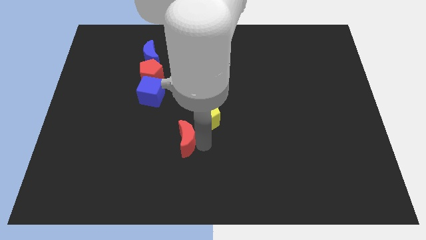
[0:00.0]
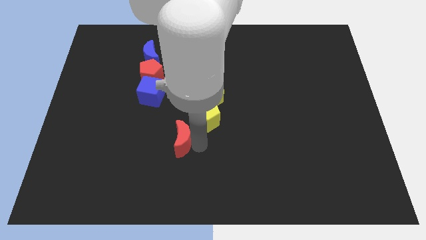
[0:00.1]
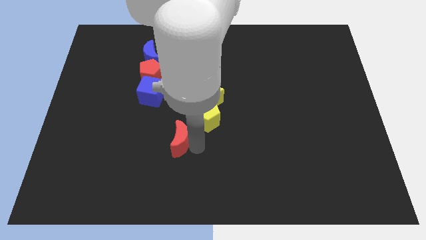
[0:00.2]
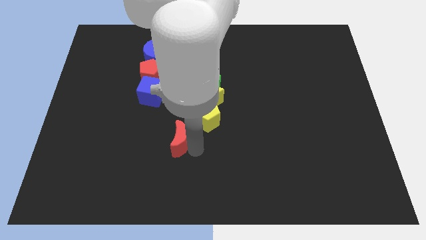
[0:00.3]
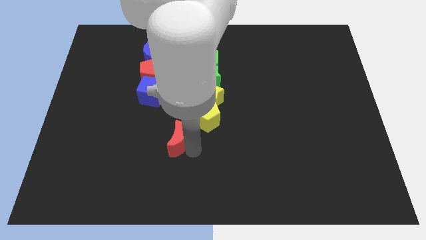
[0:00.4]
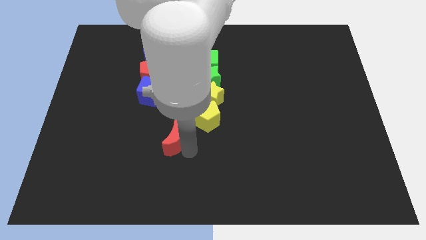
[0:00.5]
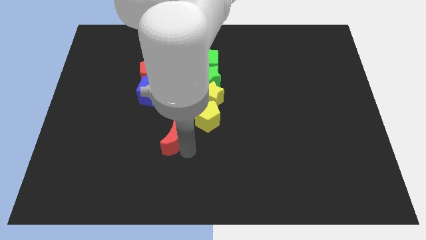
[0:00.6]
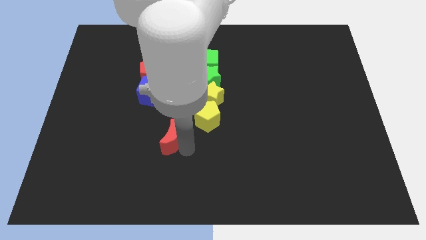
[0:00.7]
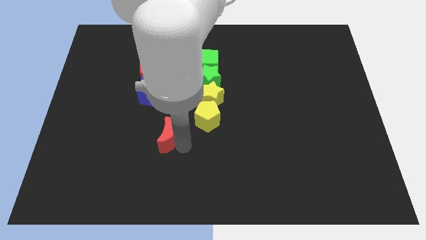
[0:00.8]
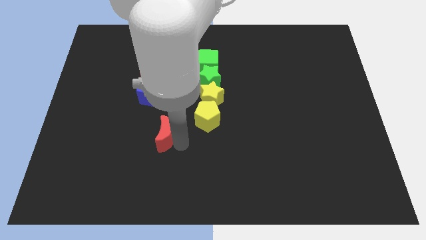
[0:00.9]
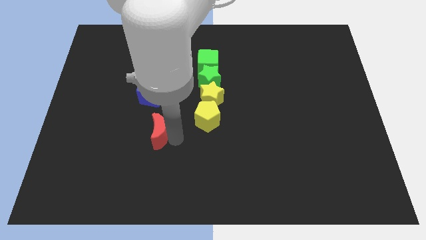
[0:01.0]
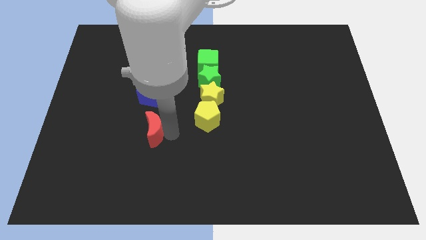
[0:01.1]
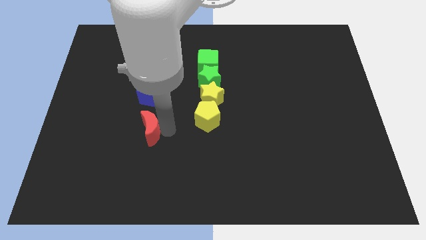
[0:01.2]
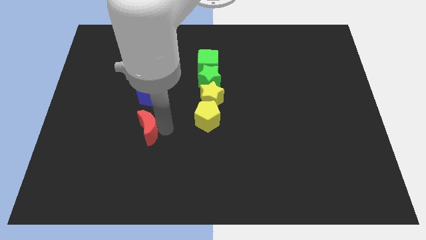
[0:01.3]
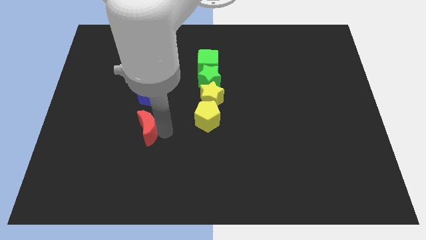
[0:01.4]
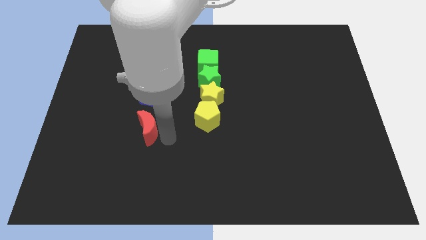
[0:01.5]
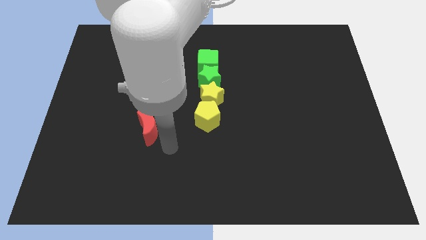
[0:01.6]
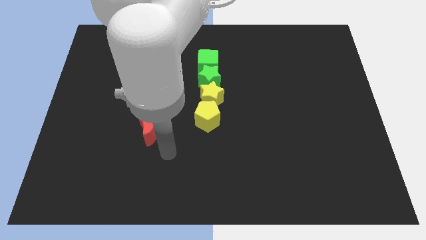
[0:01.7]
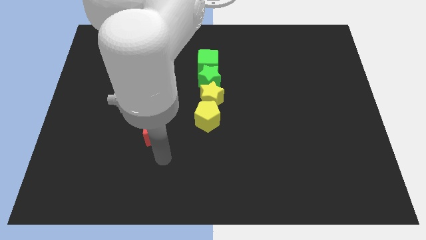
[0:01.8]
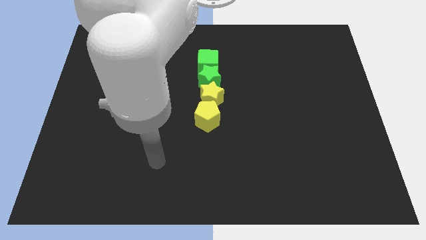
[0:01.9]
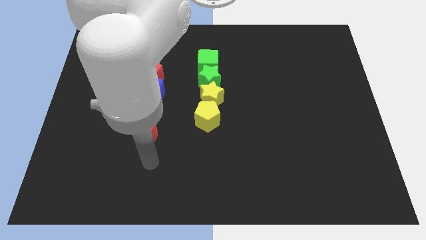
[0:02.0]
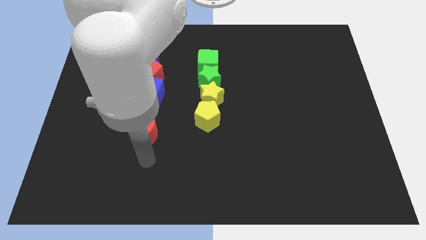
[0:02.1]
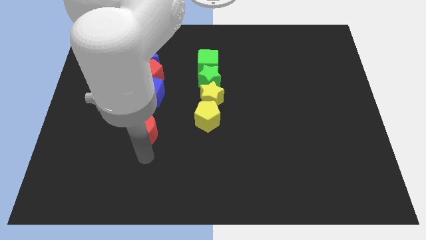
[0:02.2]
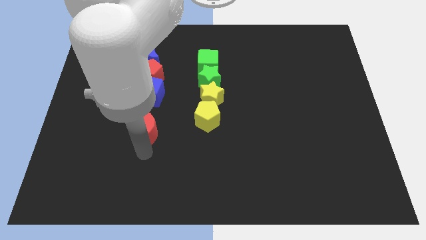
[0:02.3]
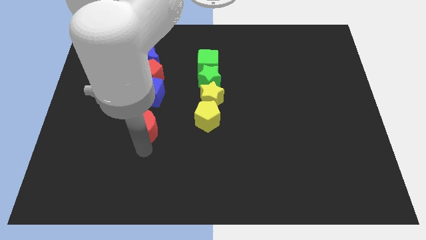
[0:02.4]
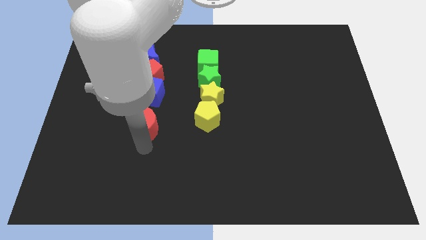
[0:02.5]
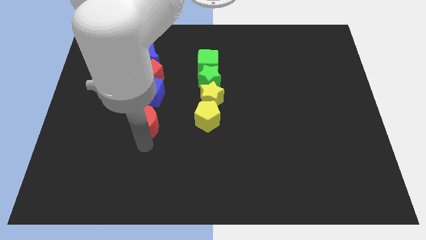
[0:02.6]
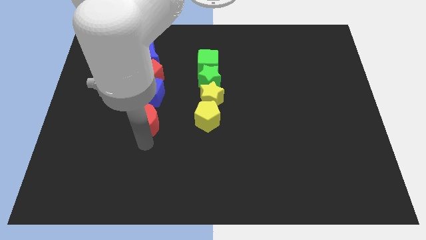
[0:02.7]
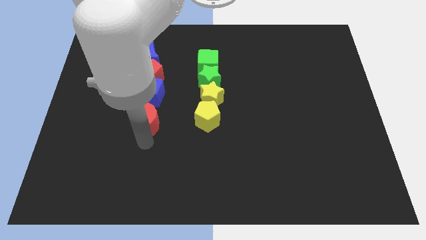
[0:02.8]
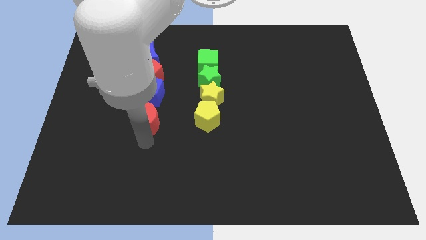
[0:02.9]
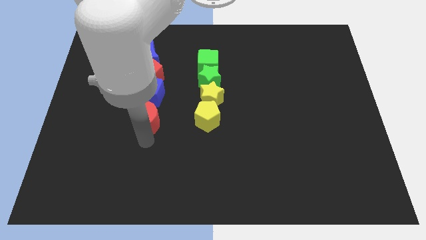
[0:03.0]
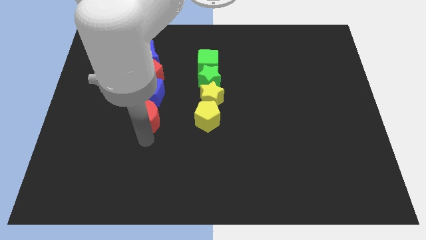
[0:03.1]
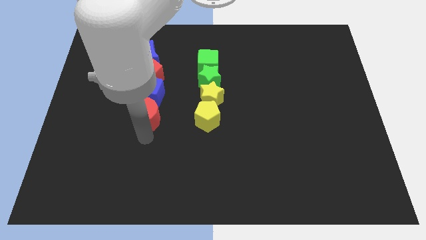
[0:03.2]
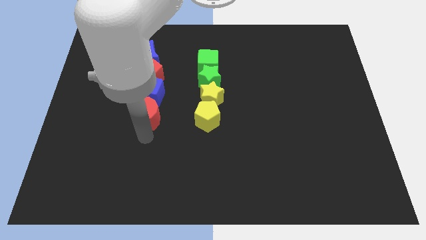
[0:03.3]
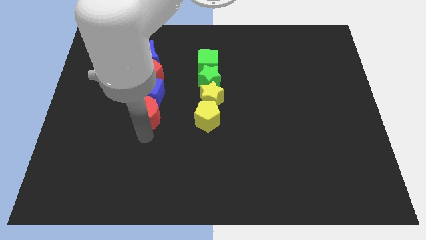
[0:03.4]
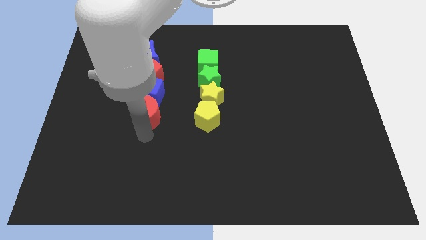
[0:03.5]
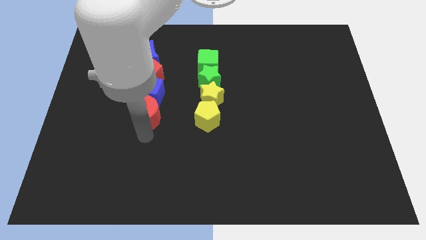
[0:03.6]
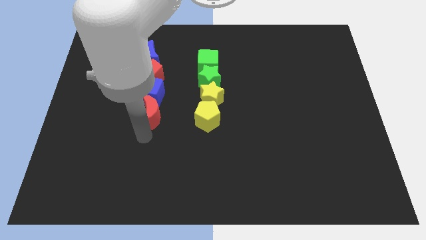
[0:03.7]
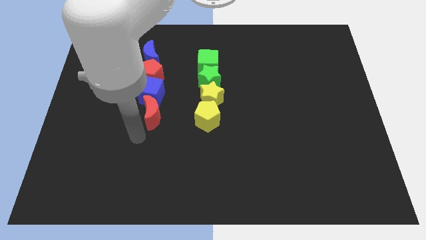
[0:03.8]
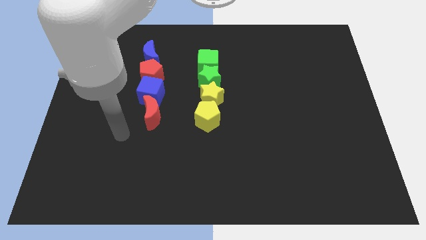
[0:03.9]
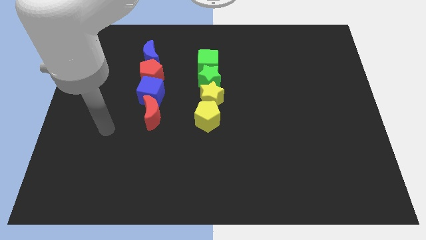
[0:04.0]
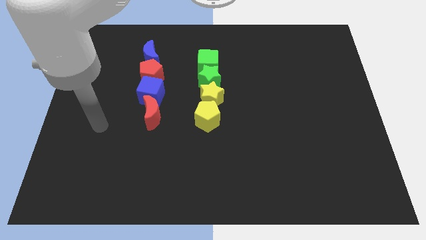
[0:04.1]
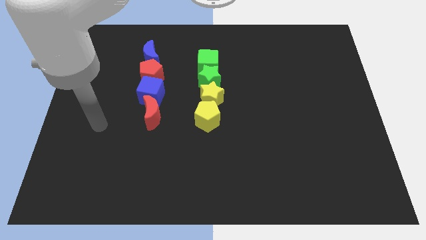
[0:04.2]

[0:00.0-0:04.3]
place the red crescent below the blue cube

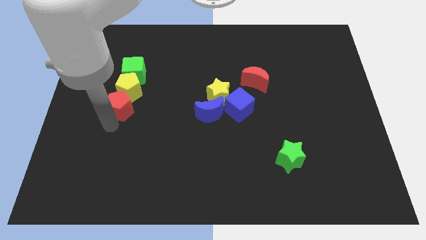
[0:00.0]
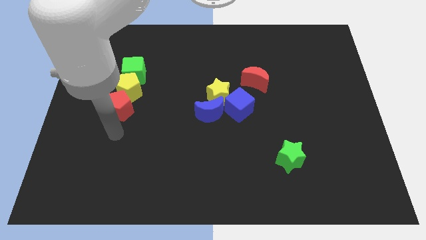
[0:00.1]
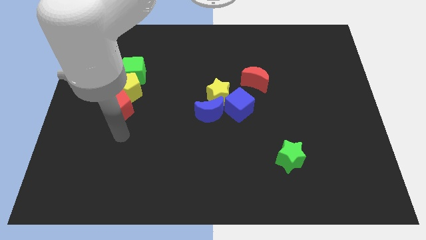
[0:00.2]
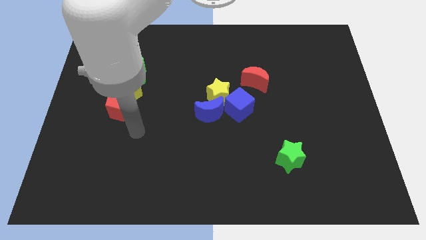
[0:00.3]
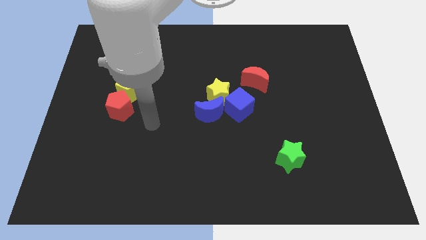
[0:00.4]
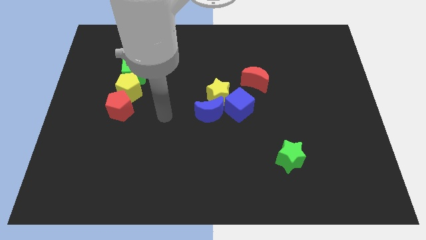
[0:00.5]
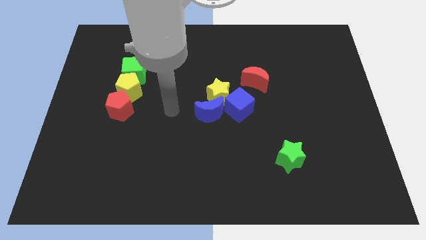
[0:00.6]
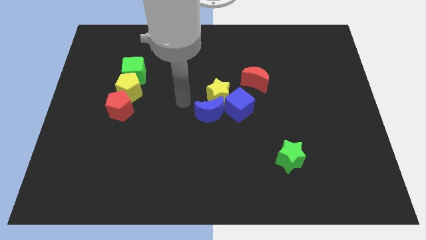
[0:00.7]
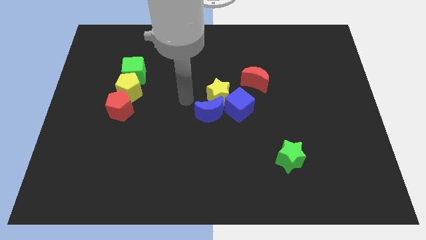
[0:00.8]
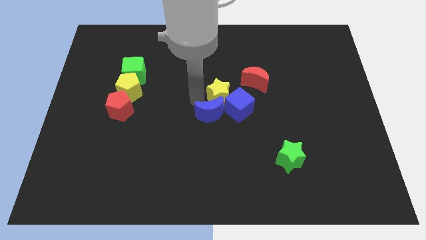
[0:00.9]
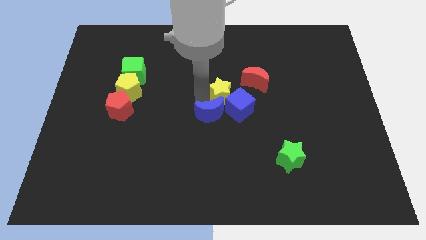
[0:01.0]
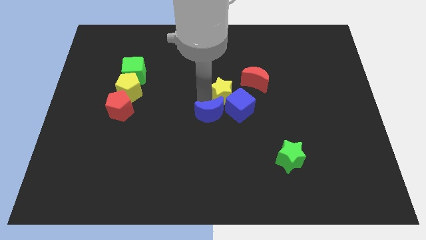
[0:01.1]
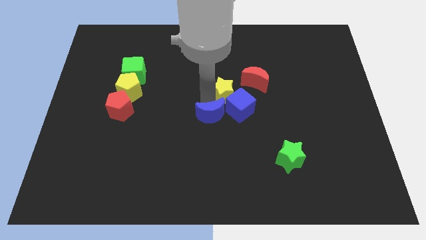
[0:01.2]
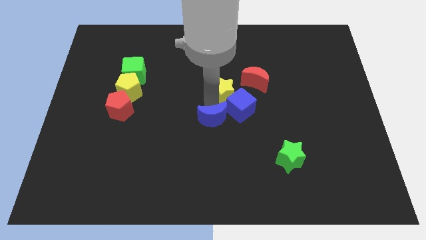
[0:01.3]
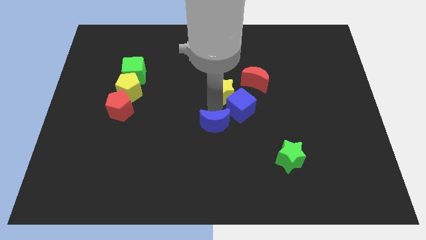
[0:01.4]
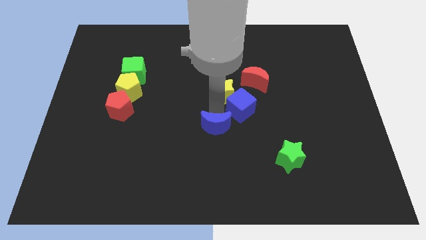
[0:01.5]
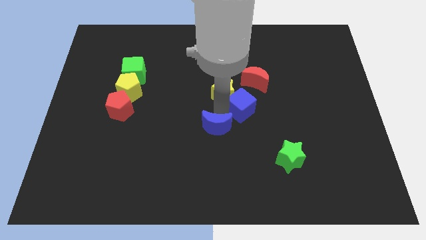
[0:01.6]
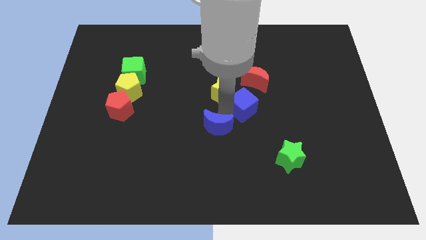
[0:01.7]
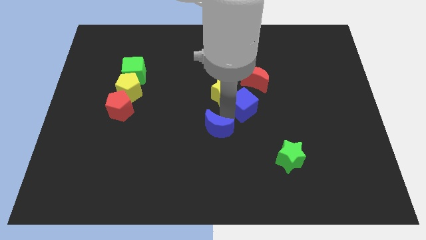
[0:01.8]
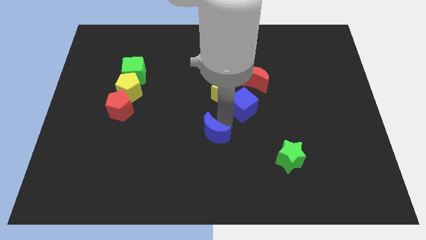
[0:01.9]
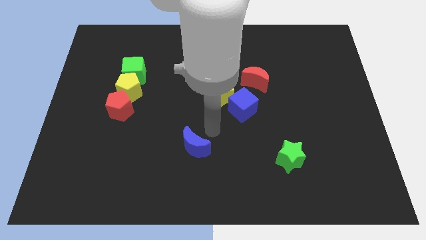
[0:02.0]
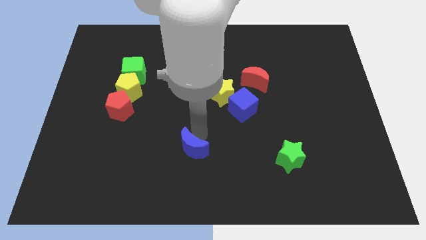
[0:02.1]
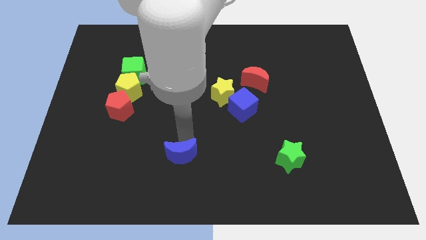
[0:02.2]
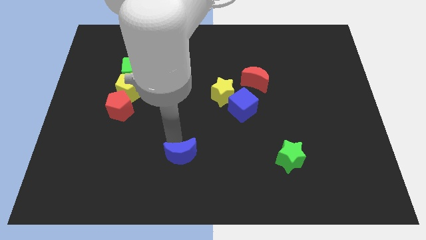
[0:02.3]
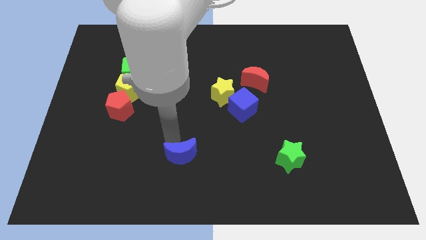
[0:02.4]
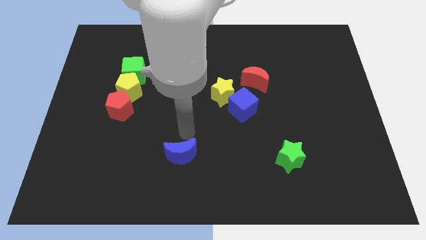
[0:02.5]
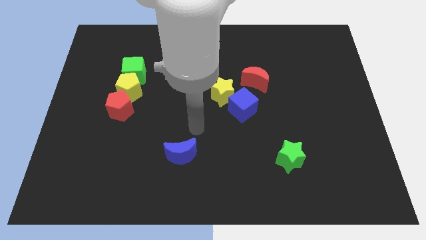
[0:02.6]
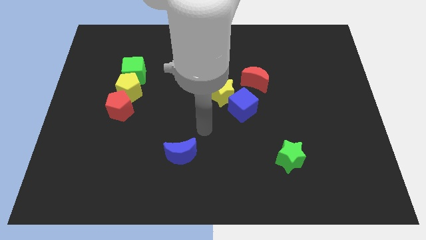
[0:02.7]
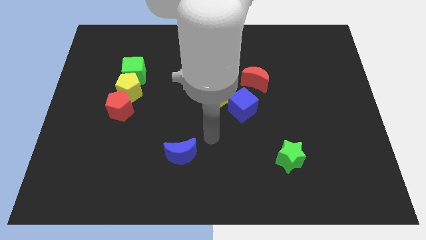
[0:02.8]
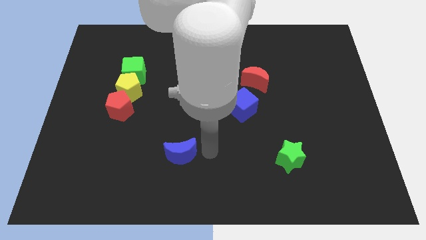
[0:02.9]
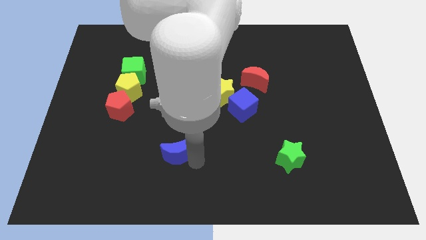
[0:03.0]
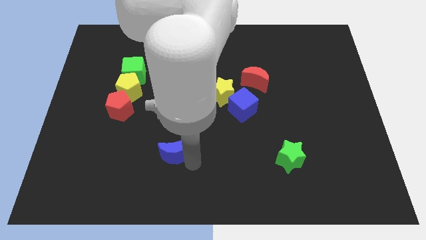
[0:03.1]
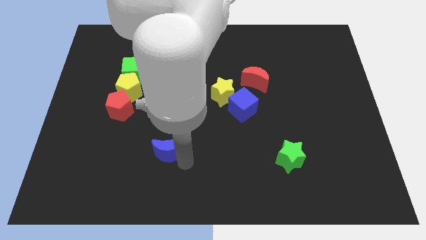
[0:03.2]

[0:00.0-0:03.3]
move the blue crescent away from the group of blocks

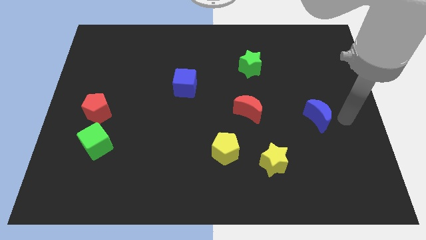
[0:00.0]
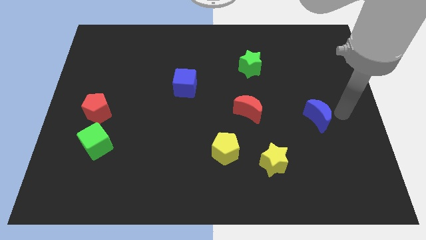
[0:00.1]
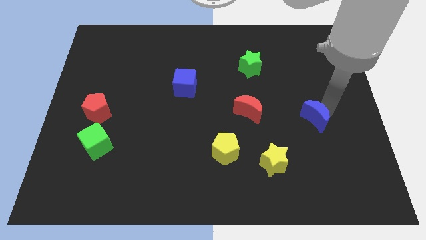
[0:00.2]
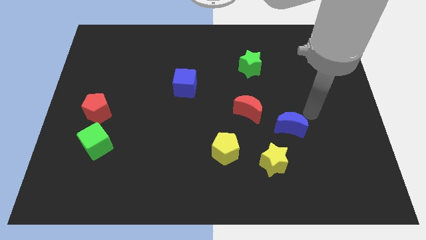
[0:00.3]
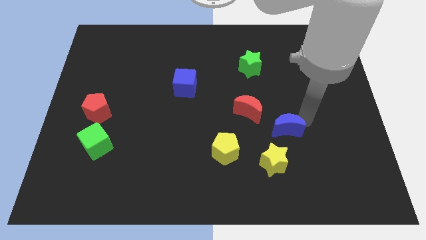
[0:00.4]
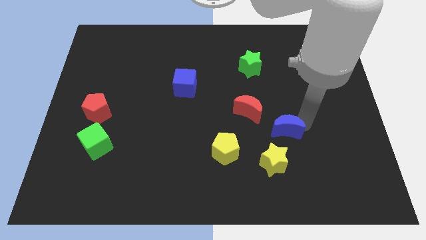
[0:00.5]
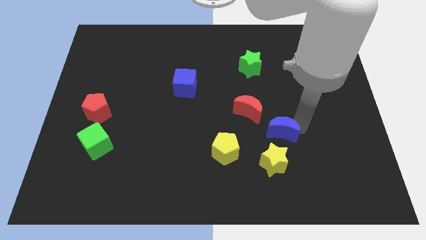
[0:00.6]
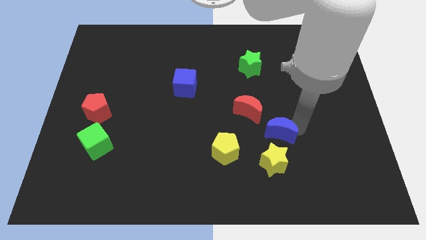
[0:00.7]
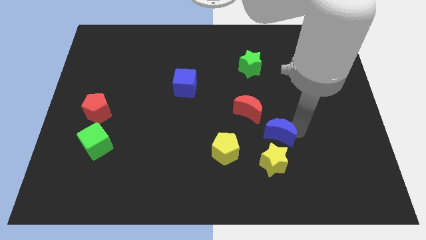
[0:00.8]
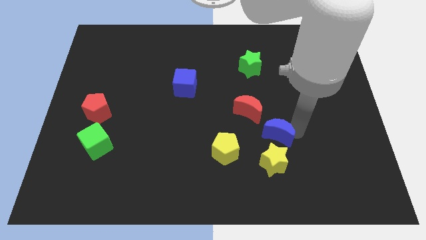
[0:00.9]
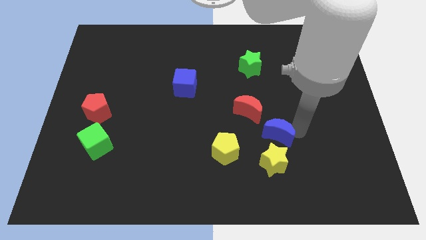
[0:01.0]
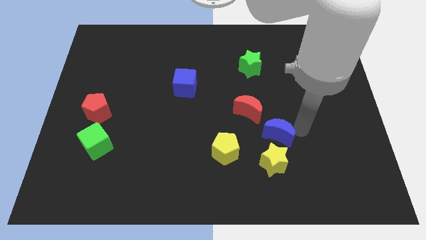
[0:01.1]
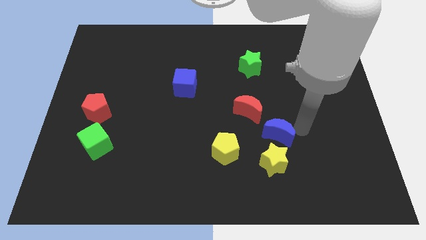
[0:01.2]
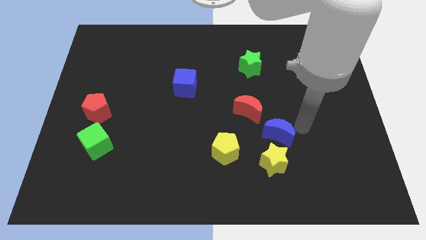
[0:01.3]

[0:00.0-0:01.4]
place the blue crescent on the top of the yellow star
